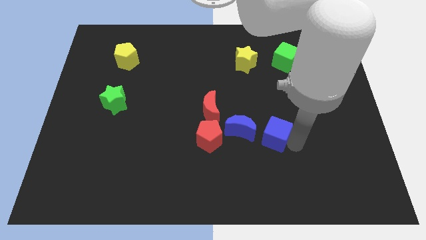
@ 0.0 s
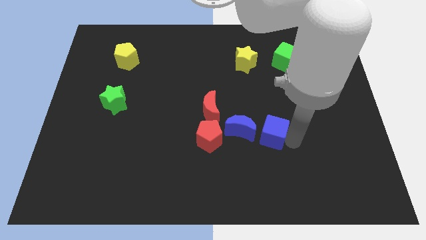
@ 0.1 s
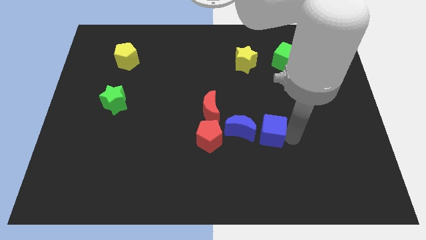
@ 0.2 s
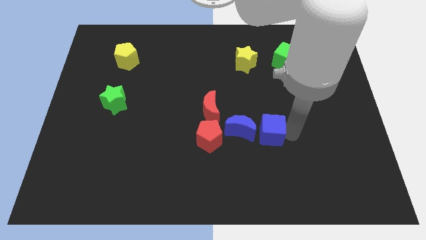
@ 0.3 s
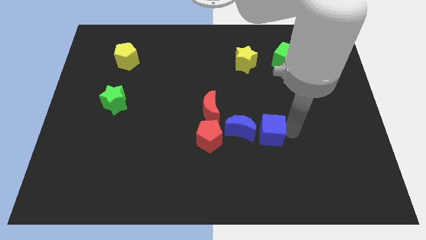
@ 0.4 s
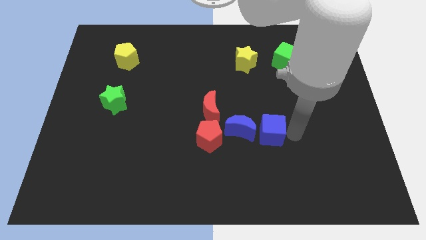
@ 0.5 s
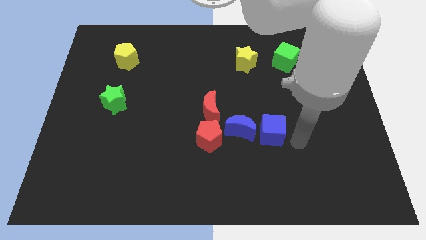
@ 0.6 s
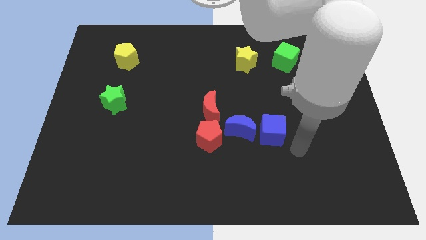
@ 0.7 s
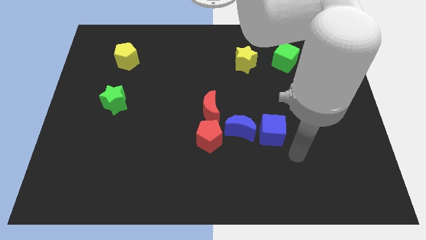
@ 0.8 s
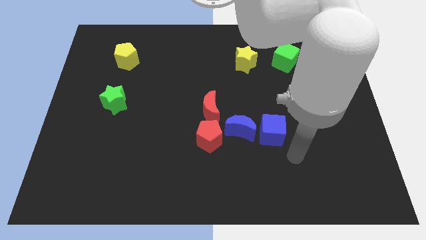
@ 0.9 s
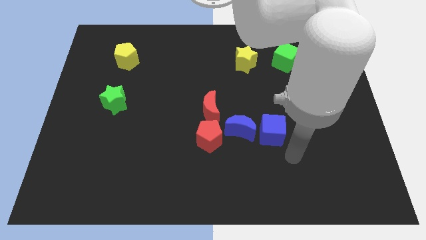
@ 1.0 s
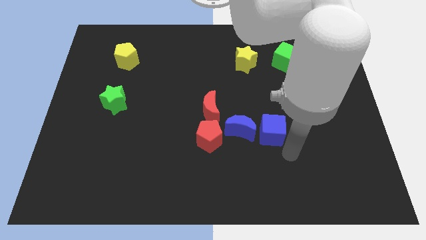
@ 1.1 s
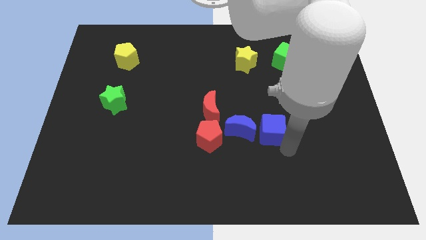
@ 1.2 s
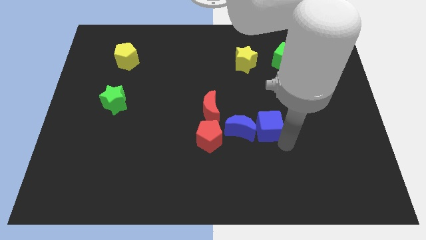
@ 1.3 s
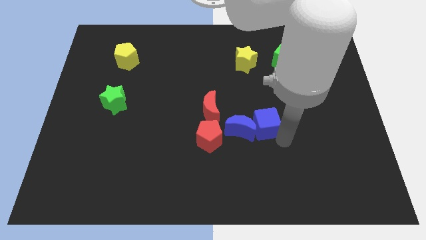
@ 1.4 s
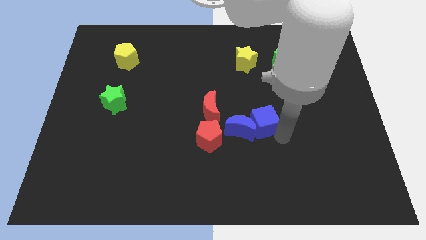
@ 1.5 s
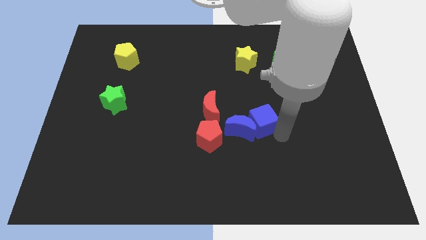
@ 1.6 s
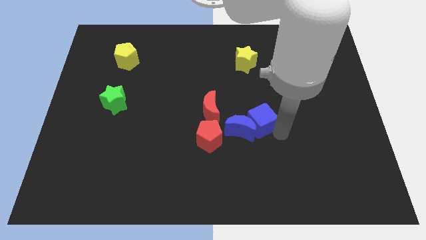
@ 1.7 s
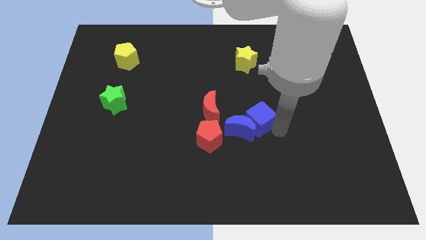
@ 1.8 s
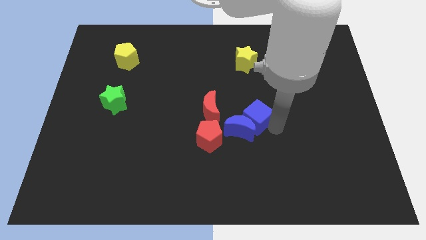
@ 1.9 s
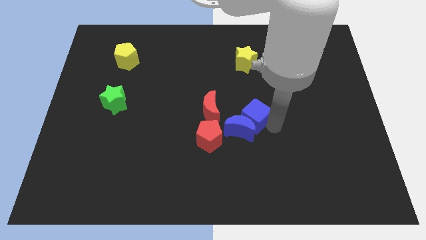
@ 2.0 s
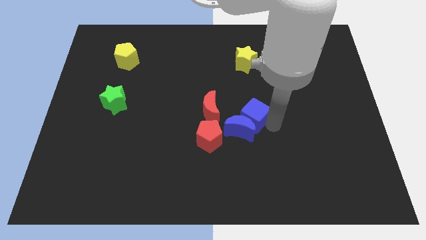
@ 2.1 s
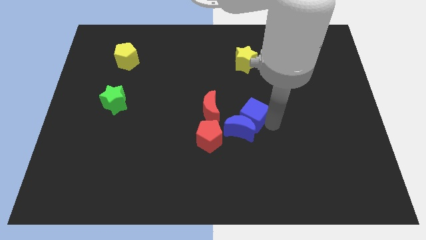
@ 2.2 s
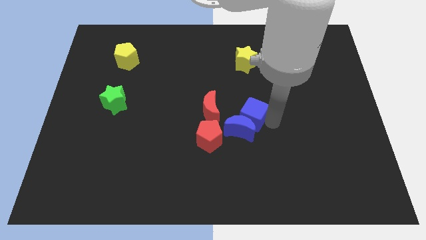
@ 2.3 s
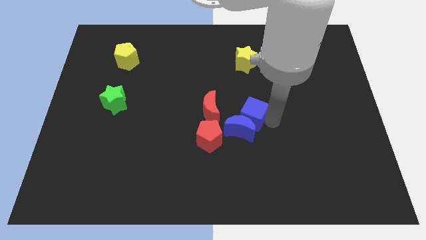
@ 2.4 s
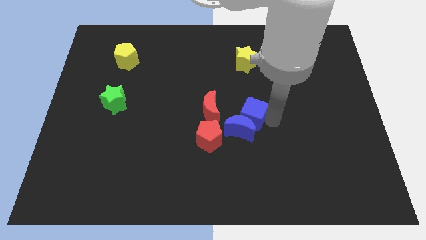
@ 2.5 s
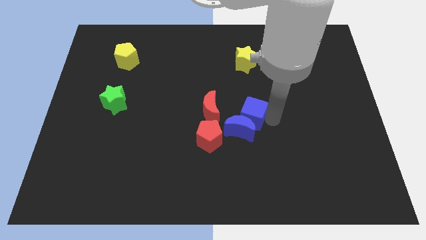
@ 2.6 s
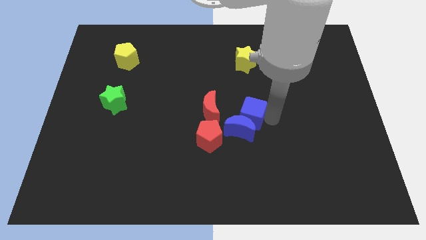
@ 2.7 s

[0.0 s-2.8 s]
push blue cube into blue crescent

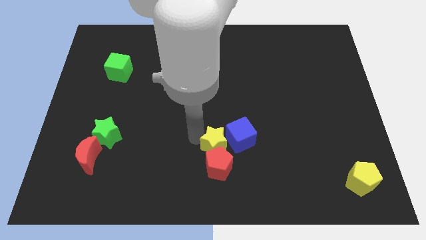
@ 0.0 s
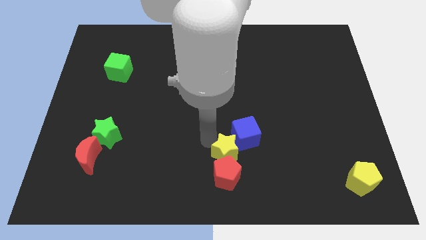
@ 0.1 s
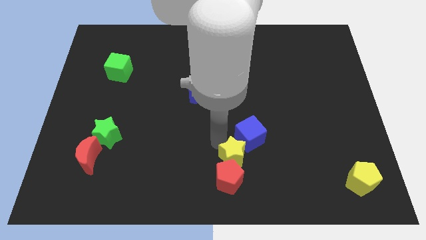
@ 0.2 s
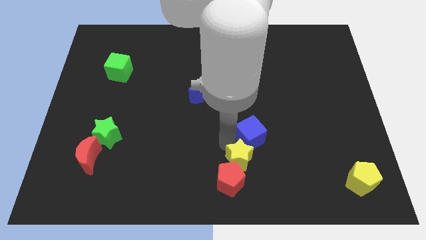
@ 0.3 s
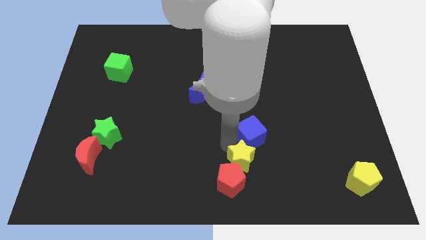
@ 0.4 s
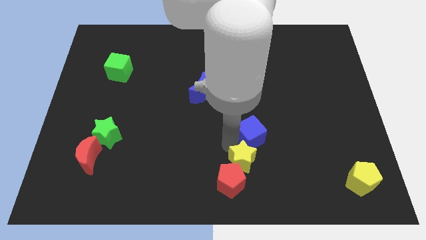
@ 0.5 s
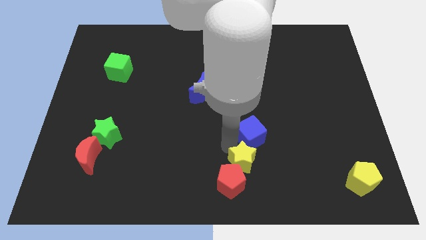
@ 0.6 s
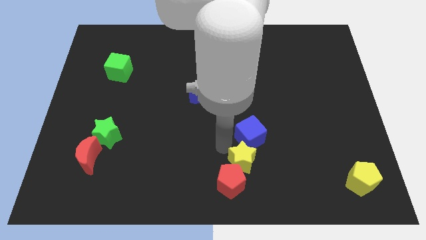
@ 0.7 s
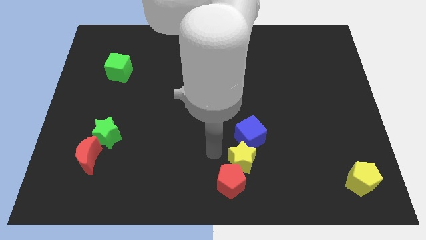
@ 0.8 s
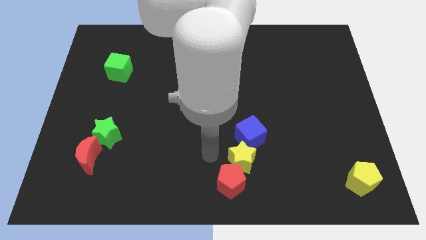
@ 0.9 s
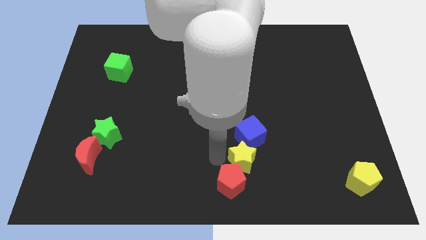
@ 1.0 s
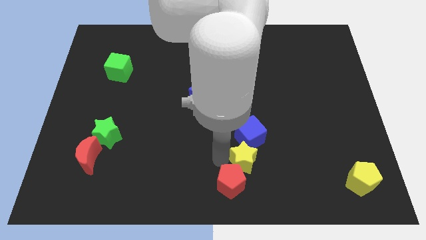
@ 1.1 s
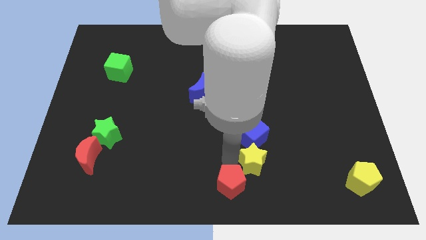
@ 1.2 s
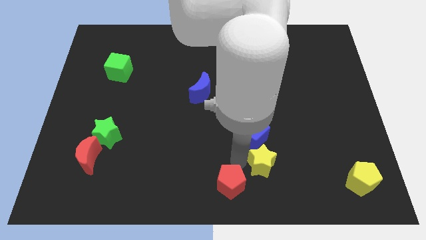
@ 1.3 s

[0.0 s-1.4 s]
place yellow star to the bottom of blue cube

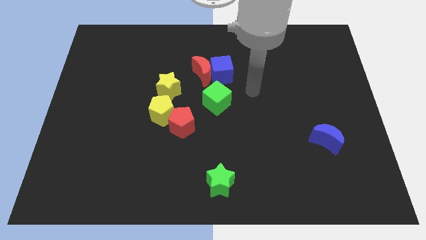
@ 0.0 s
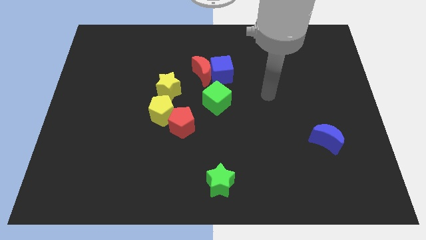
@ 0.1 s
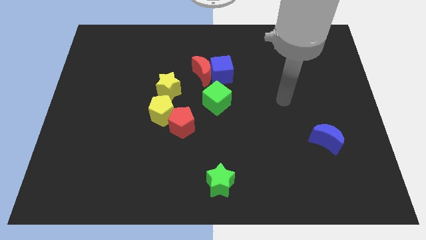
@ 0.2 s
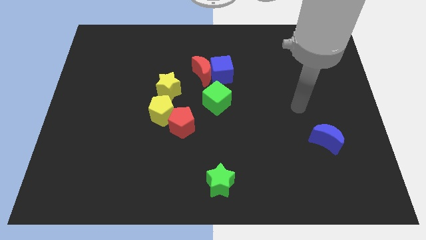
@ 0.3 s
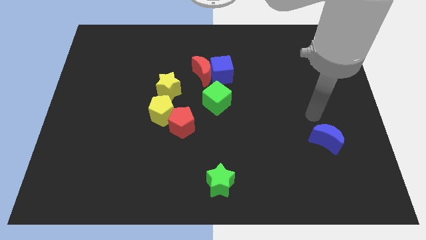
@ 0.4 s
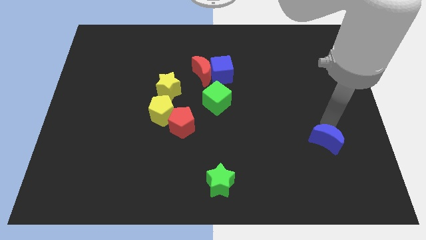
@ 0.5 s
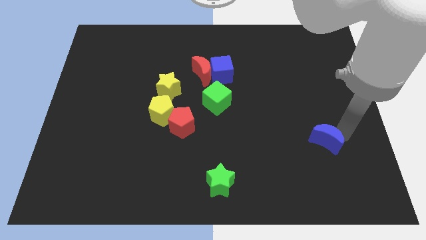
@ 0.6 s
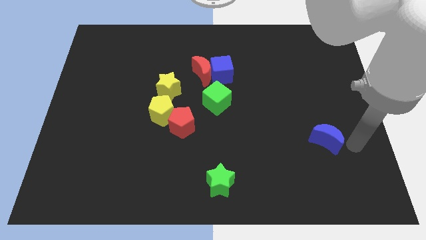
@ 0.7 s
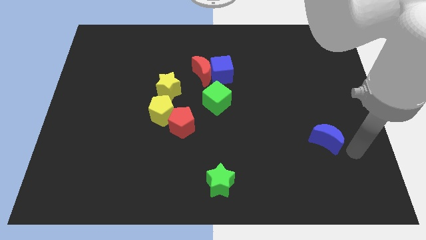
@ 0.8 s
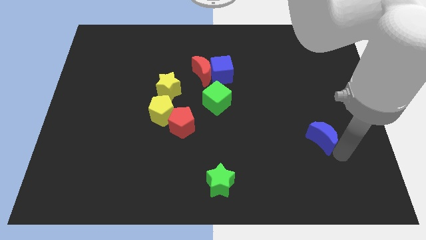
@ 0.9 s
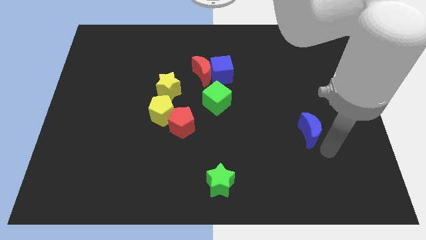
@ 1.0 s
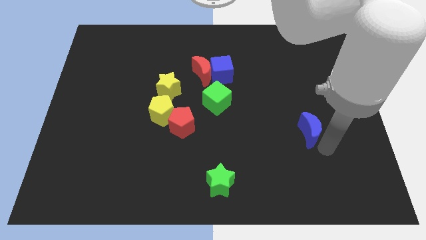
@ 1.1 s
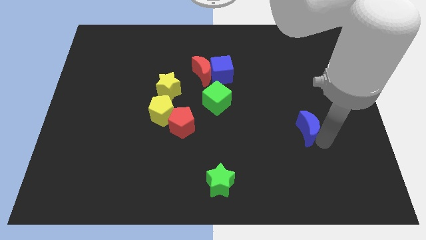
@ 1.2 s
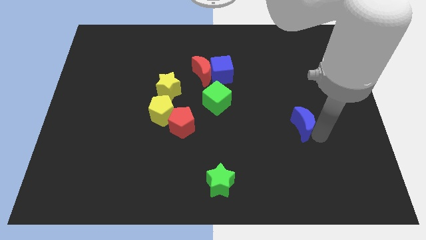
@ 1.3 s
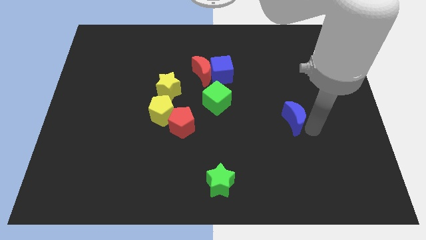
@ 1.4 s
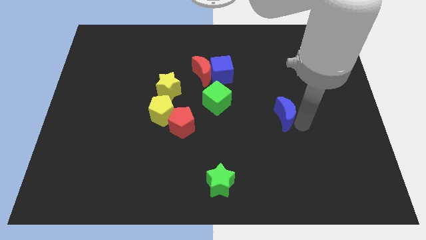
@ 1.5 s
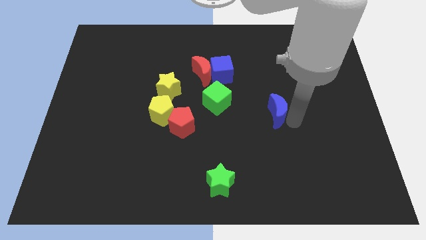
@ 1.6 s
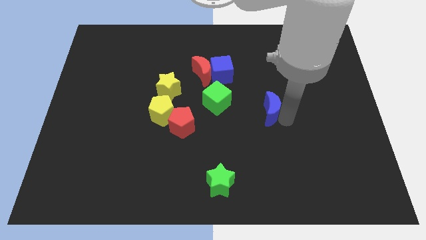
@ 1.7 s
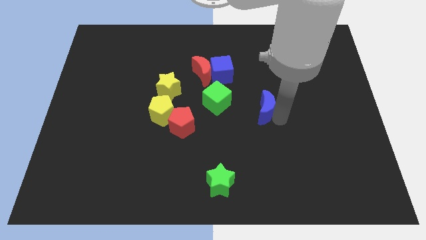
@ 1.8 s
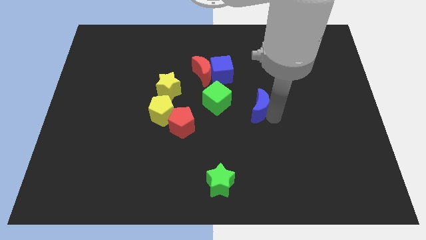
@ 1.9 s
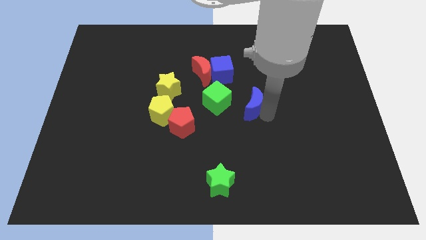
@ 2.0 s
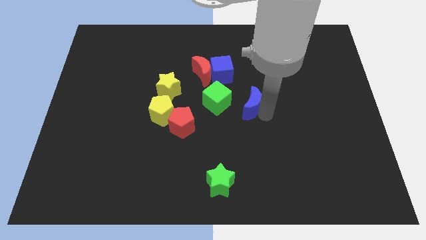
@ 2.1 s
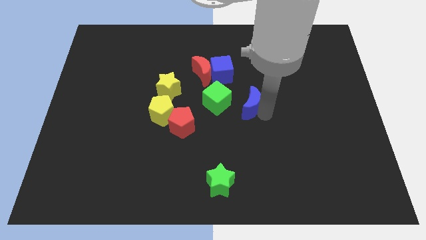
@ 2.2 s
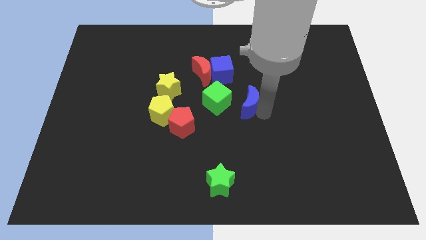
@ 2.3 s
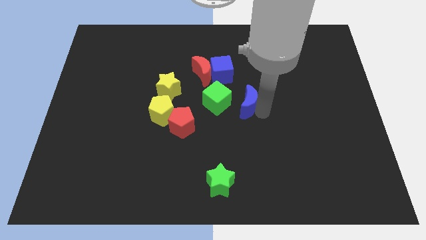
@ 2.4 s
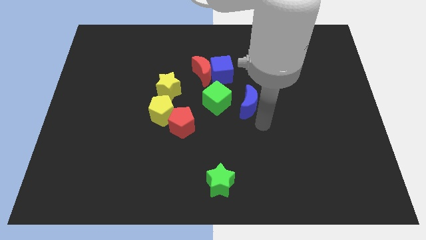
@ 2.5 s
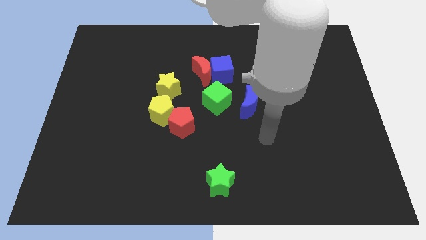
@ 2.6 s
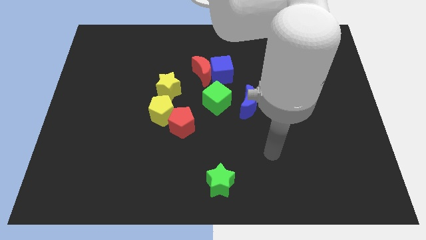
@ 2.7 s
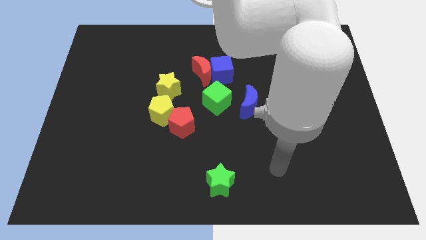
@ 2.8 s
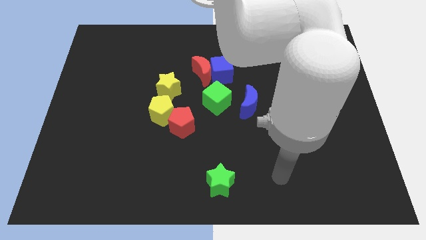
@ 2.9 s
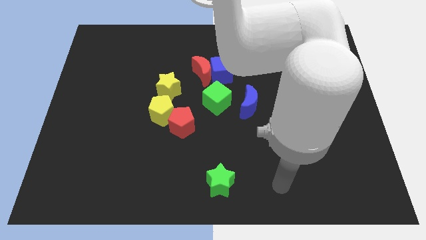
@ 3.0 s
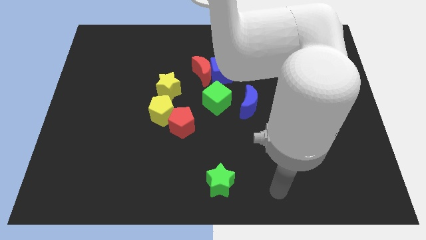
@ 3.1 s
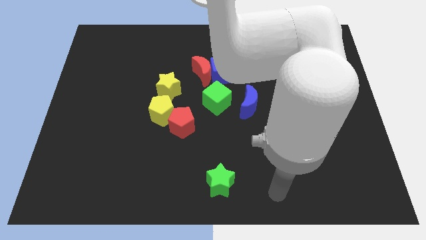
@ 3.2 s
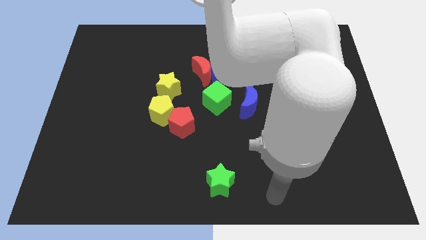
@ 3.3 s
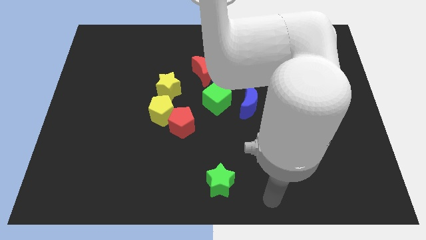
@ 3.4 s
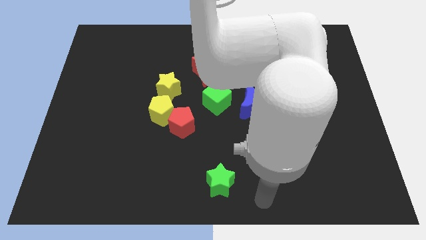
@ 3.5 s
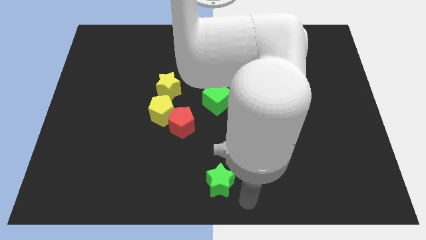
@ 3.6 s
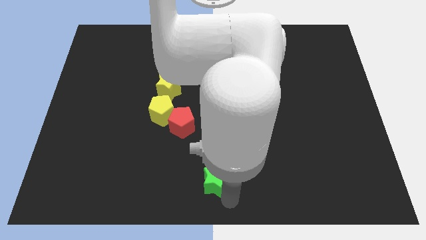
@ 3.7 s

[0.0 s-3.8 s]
move blue crescent slightly towards the green cube

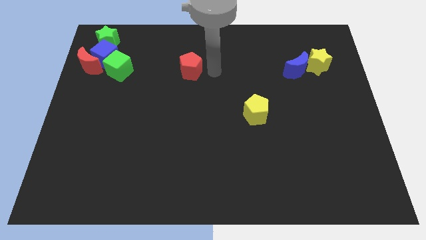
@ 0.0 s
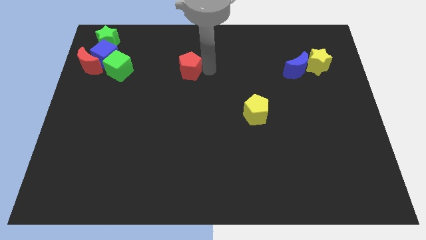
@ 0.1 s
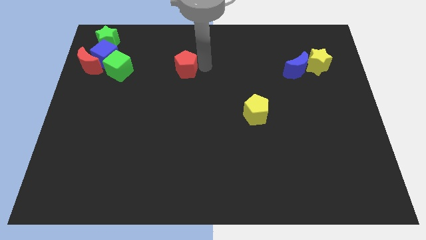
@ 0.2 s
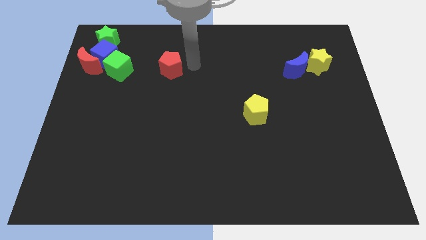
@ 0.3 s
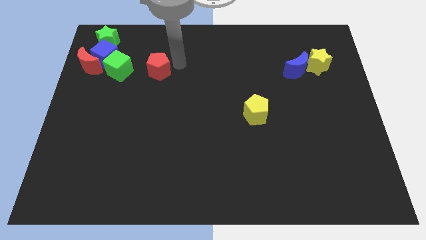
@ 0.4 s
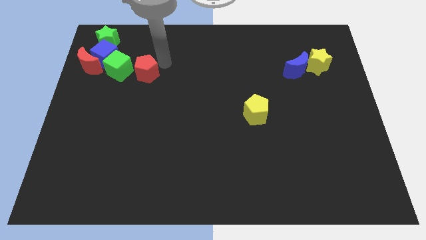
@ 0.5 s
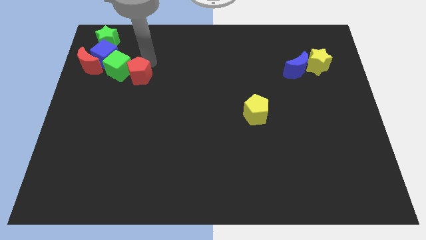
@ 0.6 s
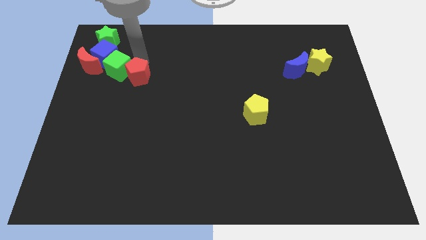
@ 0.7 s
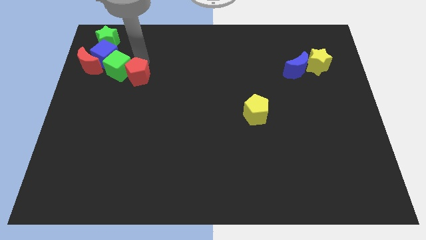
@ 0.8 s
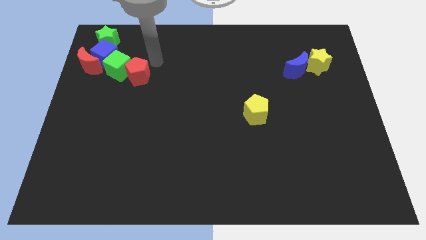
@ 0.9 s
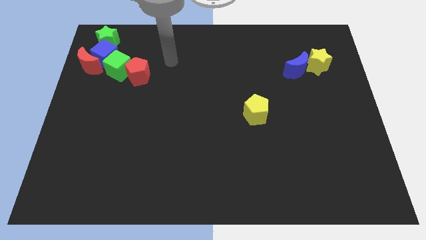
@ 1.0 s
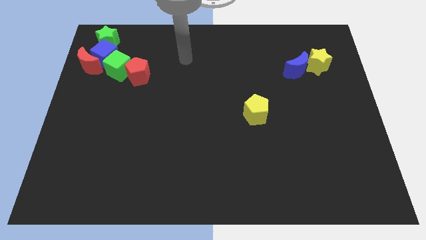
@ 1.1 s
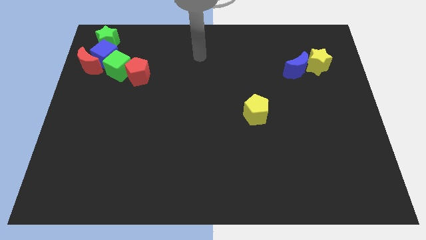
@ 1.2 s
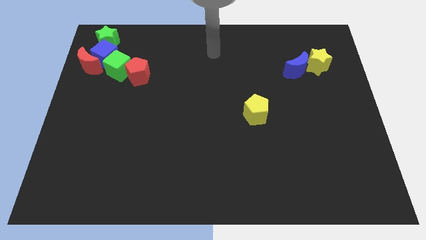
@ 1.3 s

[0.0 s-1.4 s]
push the red pentagon right to the green cube
